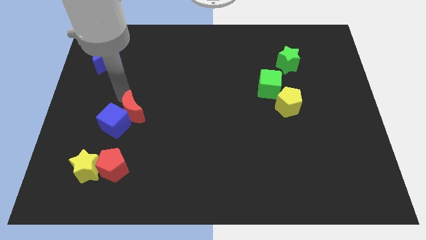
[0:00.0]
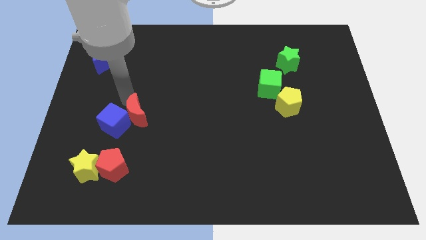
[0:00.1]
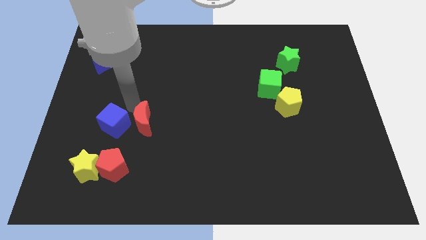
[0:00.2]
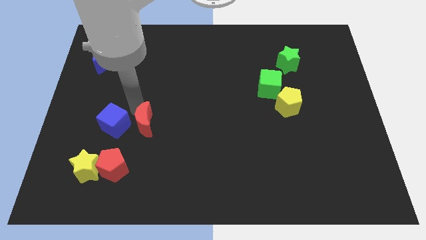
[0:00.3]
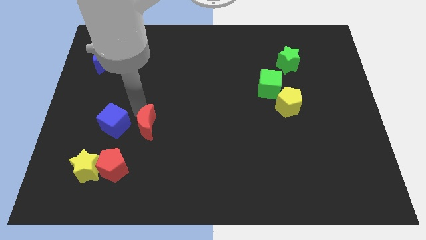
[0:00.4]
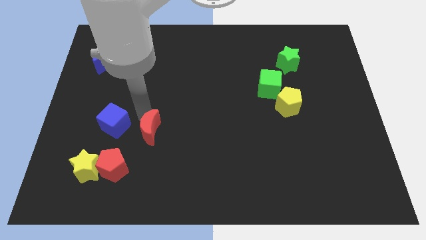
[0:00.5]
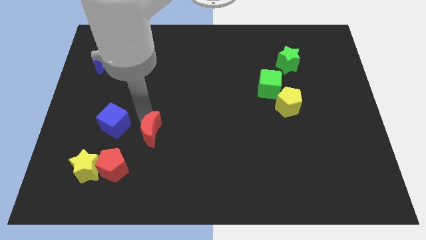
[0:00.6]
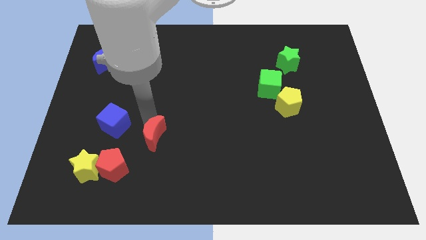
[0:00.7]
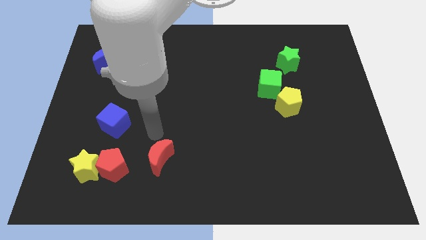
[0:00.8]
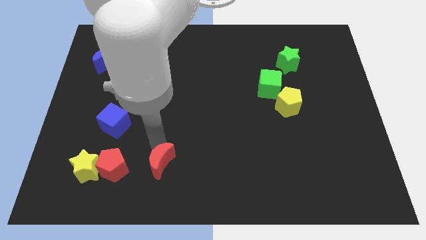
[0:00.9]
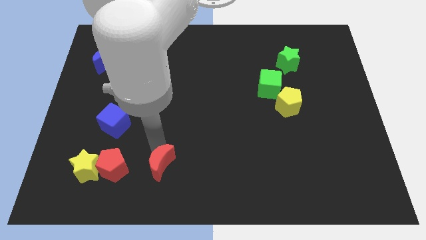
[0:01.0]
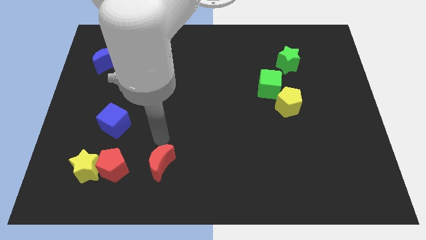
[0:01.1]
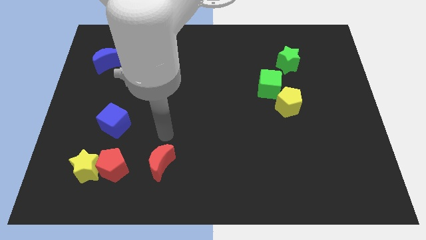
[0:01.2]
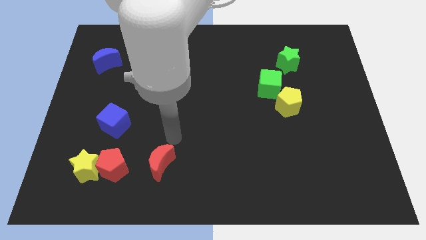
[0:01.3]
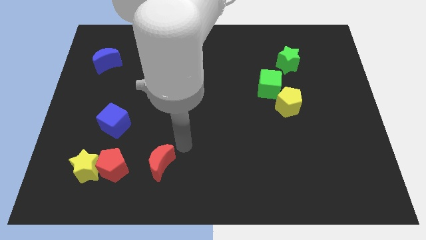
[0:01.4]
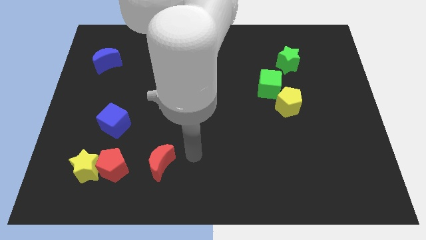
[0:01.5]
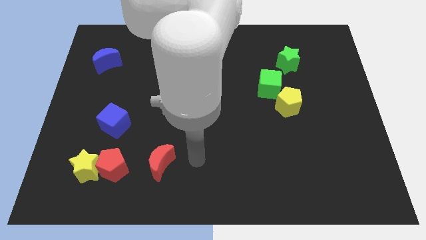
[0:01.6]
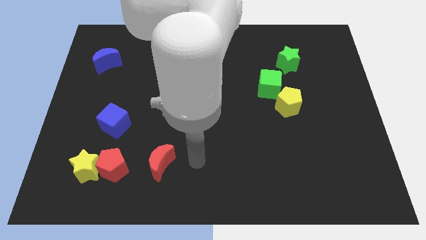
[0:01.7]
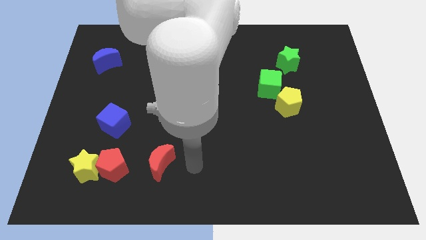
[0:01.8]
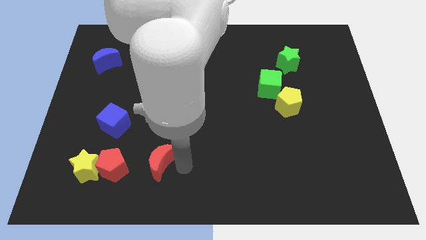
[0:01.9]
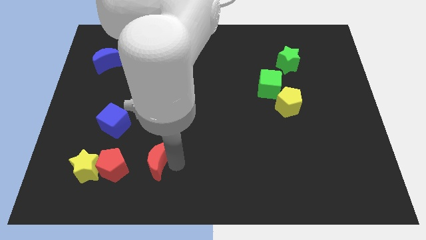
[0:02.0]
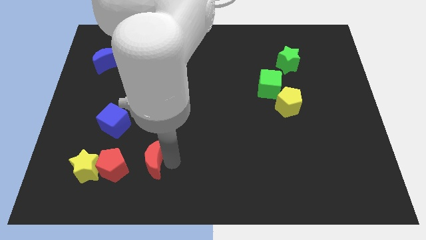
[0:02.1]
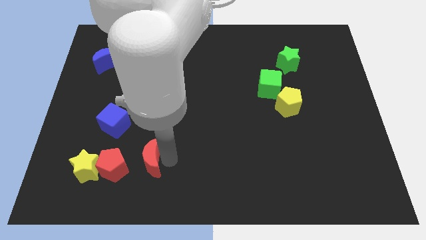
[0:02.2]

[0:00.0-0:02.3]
move the red crescent to the right of the red pentagon

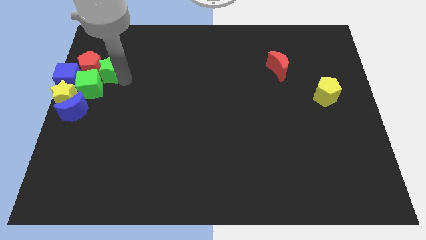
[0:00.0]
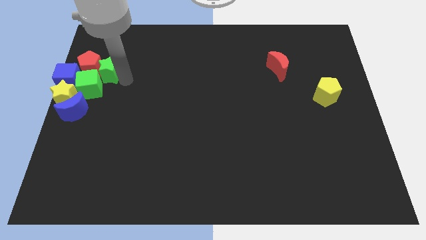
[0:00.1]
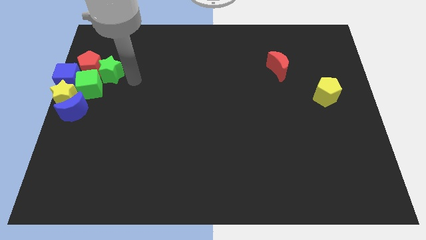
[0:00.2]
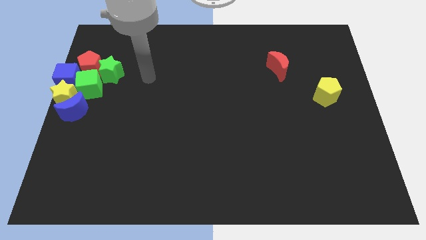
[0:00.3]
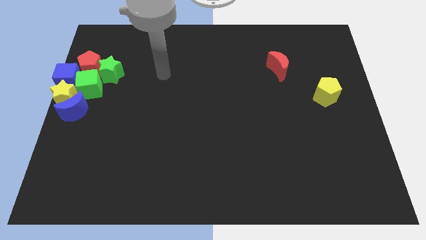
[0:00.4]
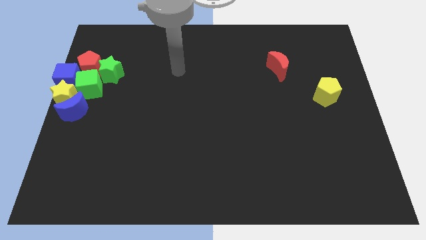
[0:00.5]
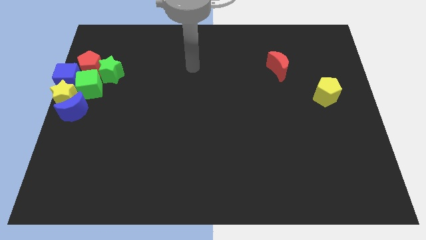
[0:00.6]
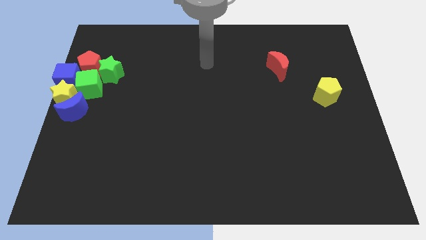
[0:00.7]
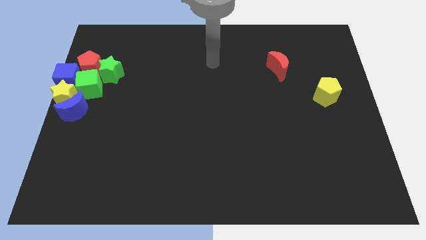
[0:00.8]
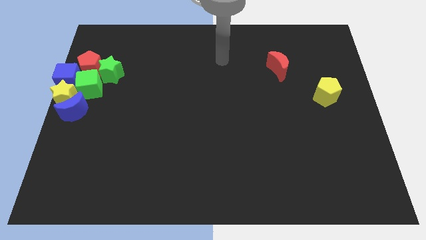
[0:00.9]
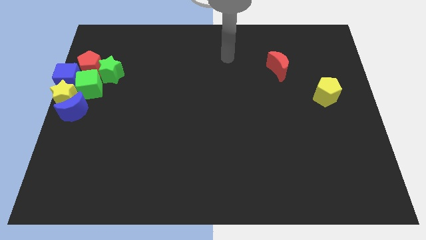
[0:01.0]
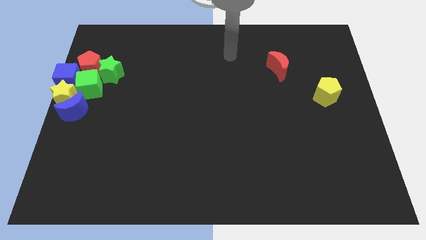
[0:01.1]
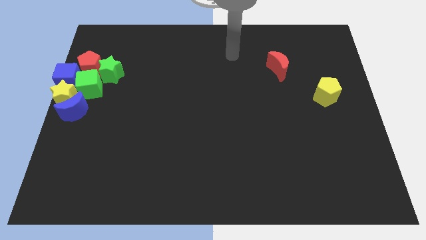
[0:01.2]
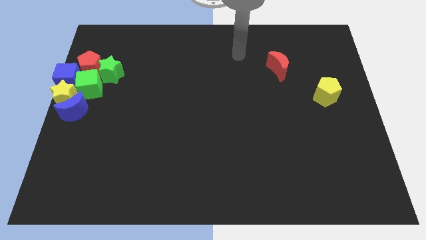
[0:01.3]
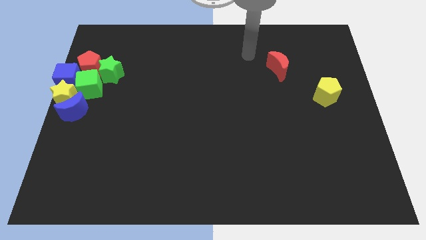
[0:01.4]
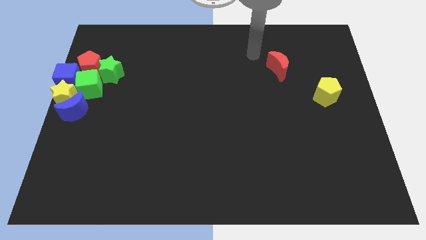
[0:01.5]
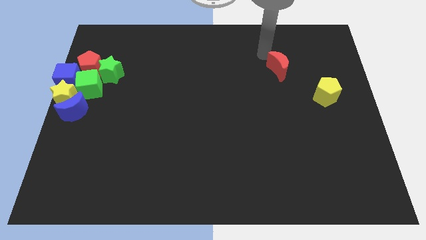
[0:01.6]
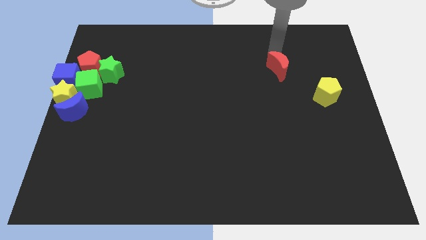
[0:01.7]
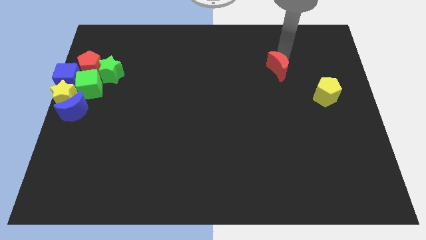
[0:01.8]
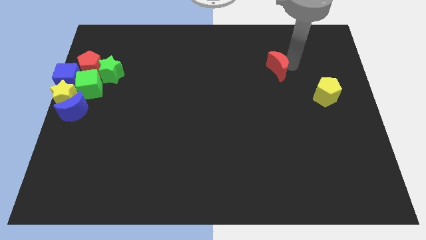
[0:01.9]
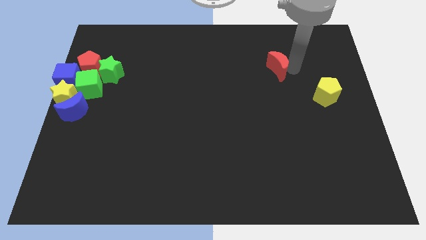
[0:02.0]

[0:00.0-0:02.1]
place your arm at the right of the red crescent

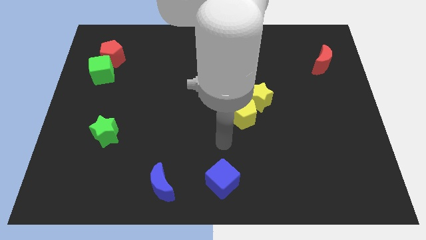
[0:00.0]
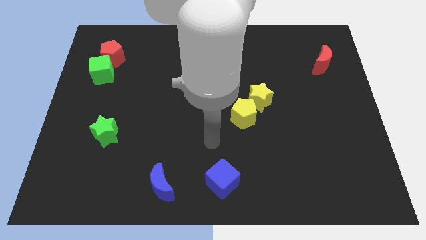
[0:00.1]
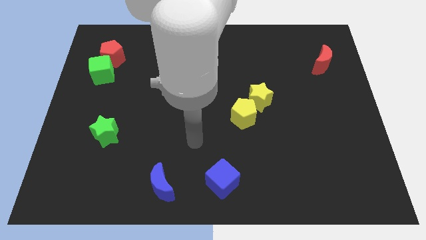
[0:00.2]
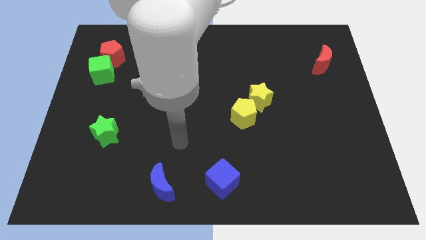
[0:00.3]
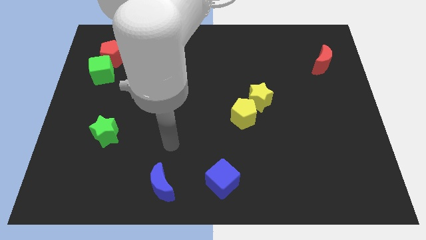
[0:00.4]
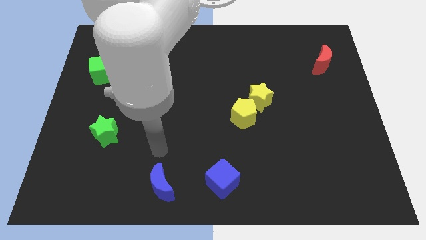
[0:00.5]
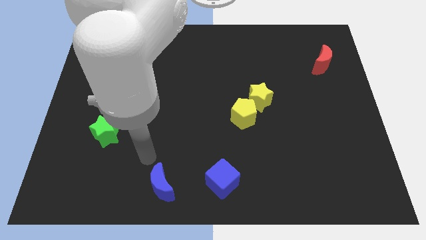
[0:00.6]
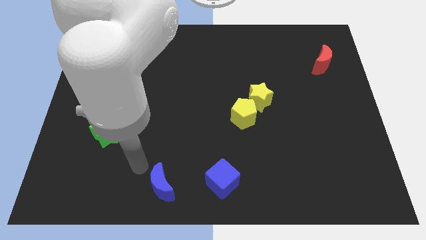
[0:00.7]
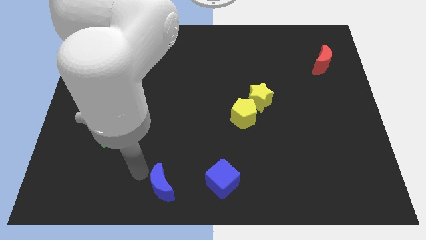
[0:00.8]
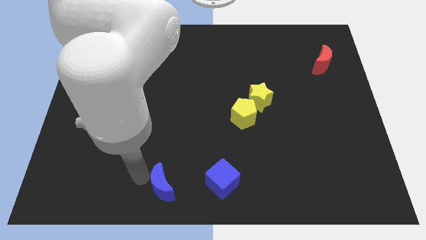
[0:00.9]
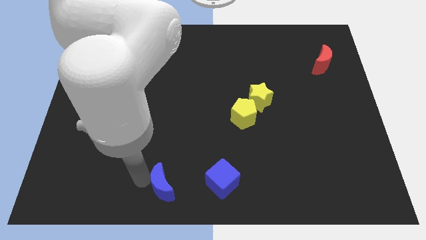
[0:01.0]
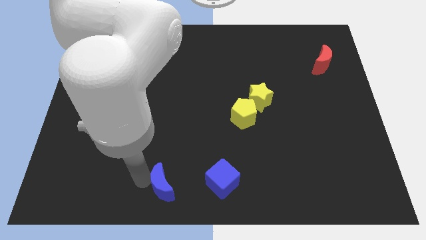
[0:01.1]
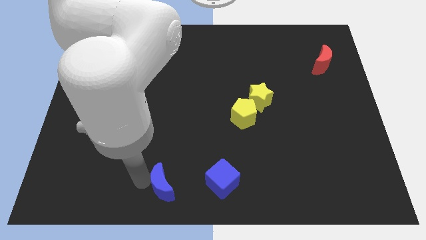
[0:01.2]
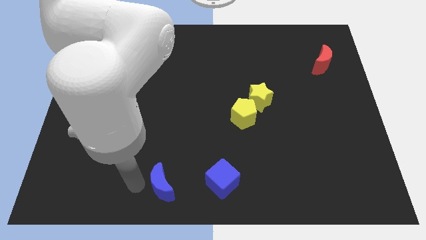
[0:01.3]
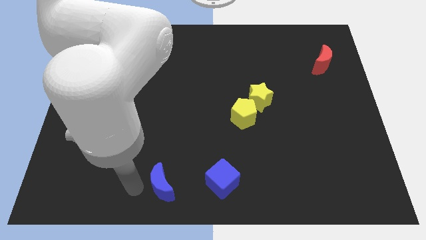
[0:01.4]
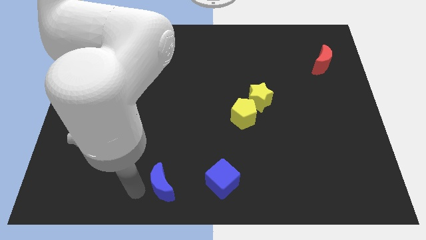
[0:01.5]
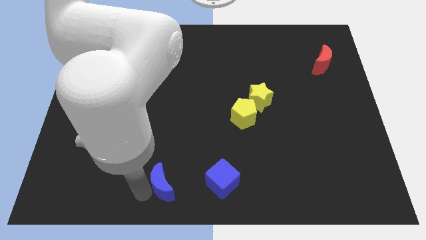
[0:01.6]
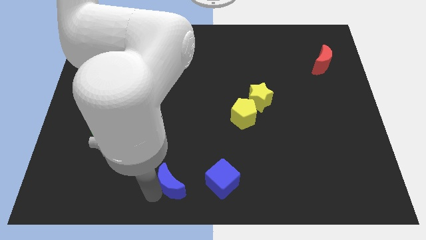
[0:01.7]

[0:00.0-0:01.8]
tap the blue crescent

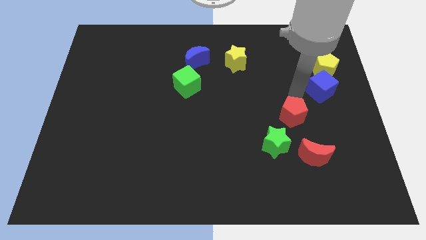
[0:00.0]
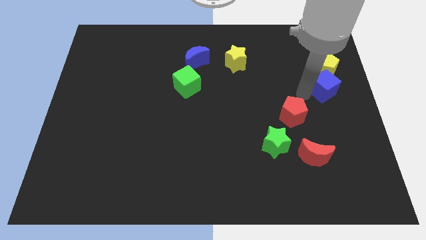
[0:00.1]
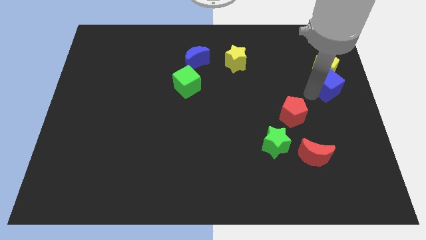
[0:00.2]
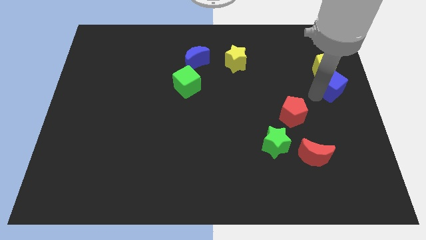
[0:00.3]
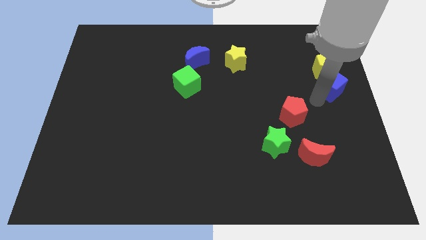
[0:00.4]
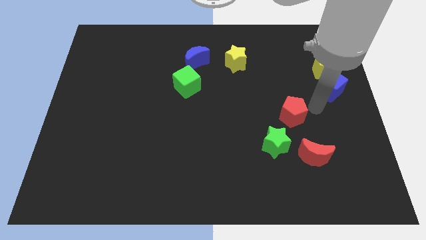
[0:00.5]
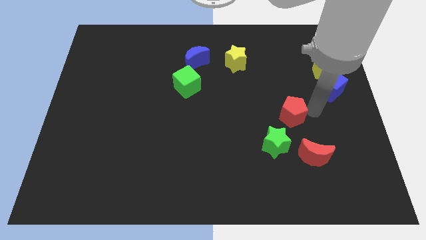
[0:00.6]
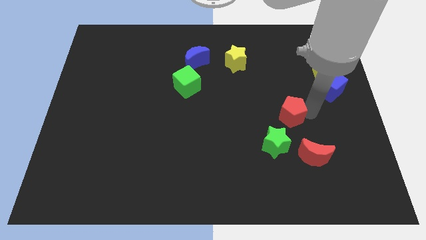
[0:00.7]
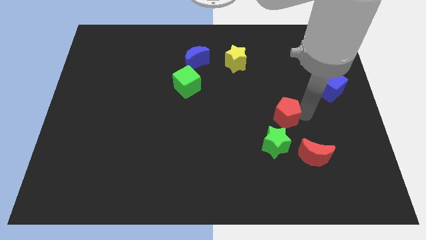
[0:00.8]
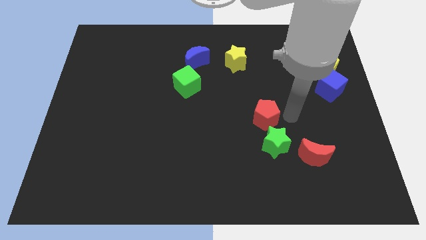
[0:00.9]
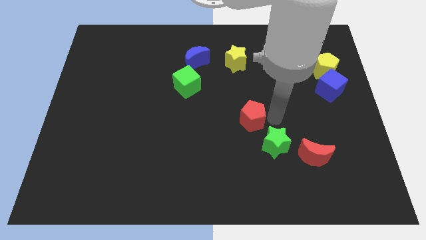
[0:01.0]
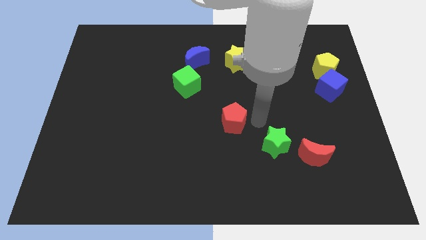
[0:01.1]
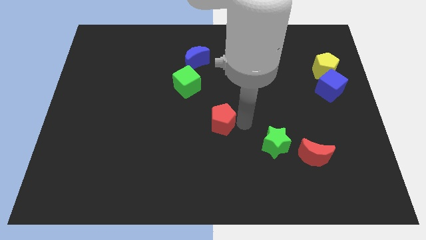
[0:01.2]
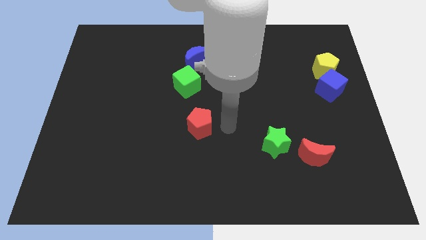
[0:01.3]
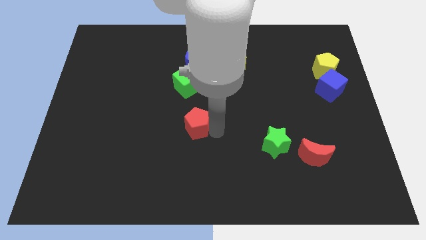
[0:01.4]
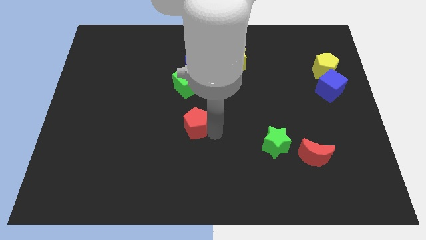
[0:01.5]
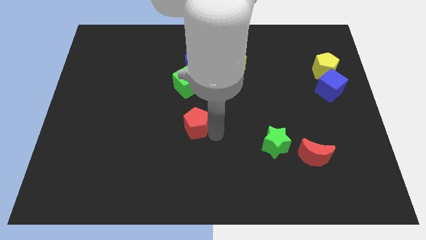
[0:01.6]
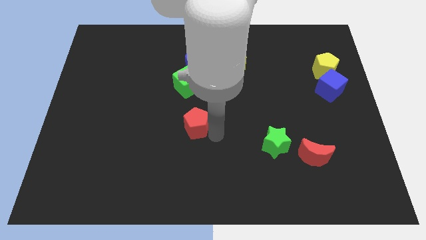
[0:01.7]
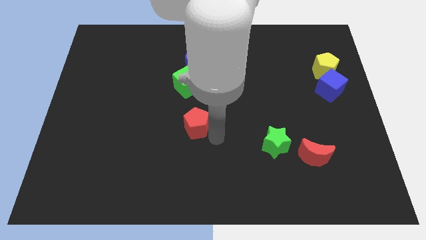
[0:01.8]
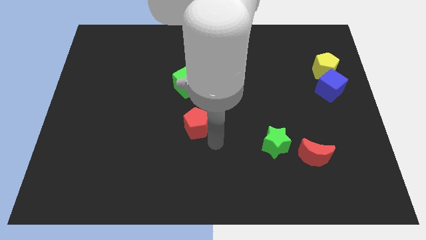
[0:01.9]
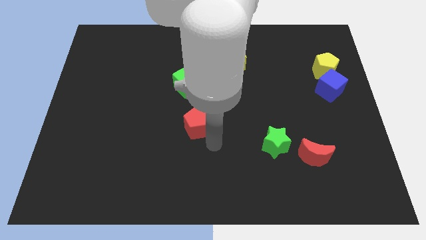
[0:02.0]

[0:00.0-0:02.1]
move the red pentagon to the center

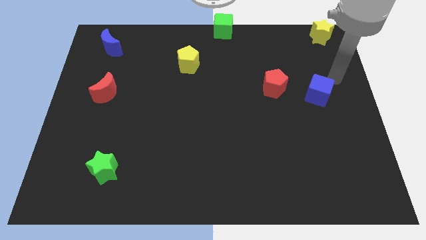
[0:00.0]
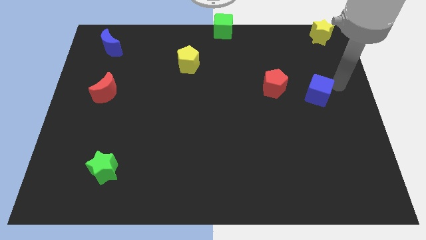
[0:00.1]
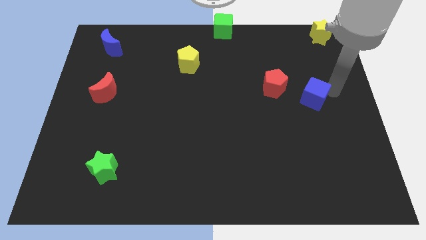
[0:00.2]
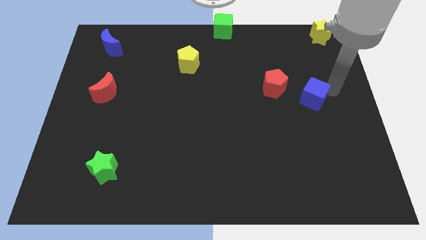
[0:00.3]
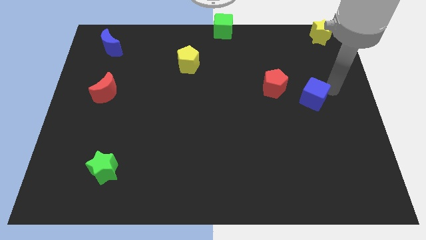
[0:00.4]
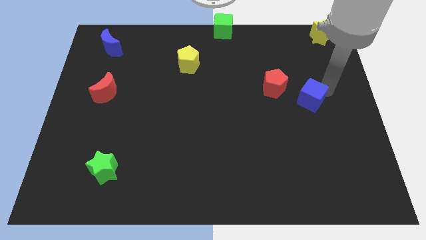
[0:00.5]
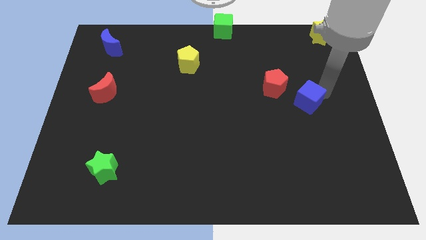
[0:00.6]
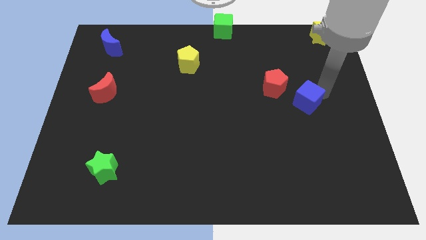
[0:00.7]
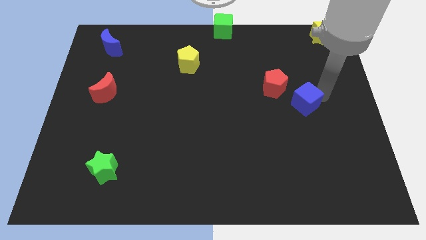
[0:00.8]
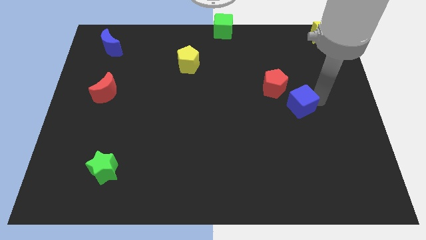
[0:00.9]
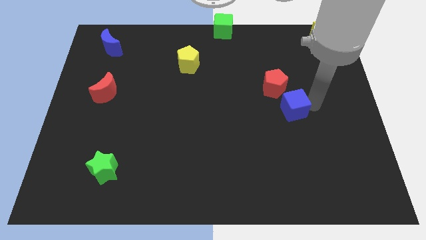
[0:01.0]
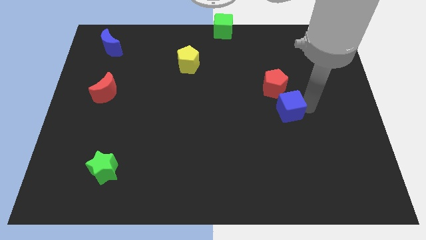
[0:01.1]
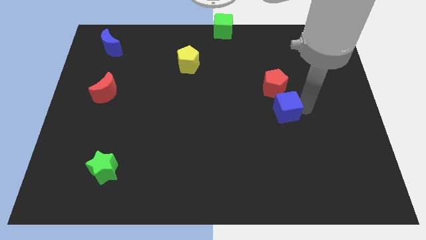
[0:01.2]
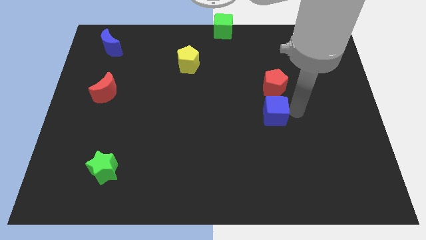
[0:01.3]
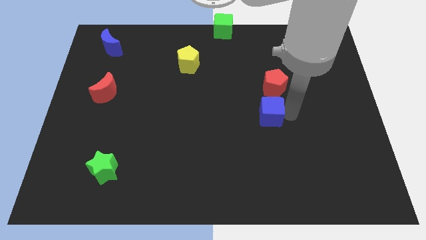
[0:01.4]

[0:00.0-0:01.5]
place the blue cube vertically below to the red pentagon
